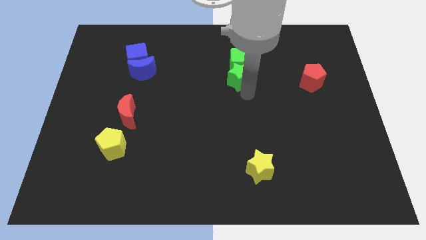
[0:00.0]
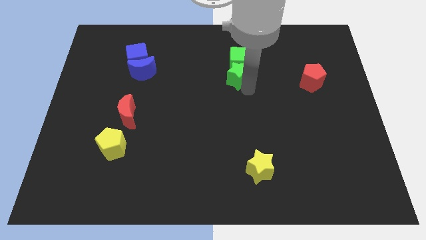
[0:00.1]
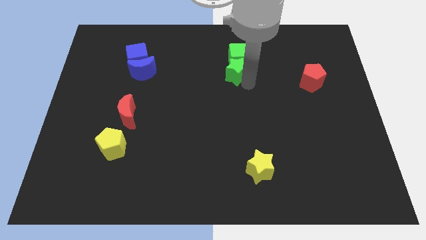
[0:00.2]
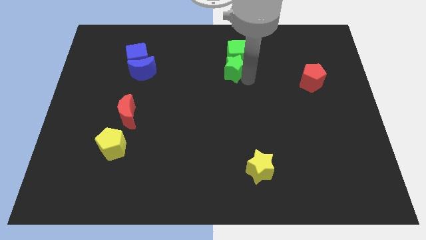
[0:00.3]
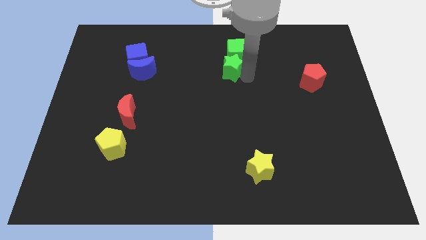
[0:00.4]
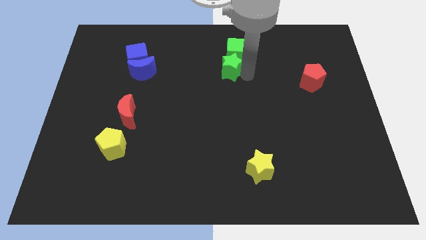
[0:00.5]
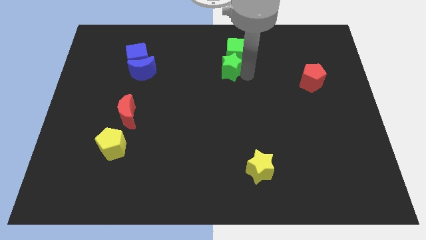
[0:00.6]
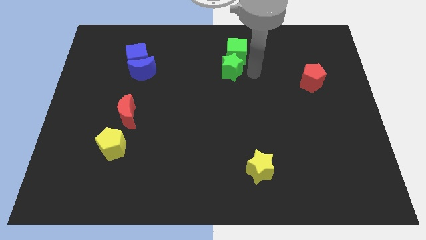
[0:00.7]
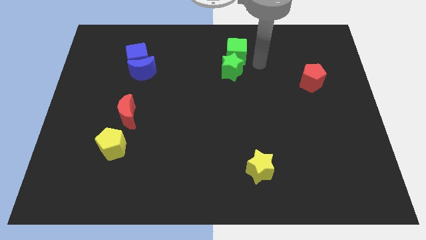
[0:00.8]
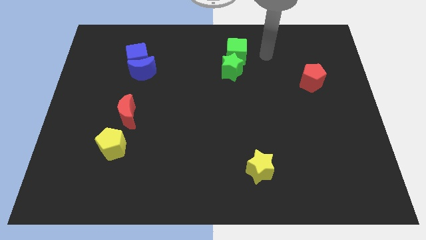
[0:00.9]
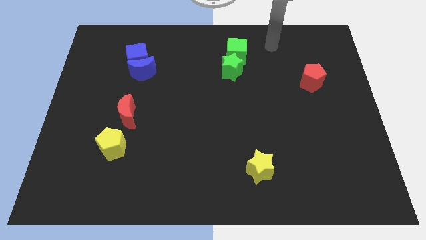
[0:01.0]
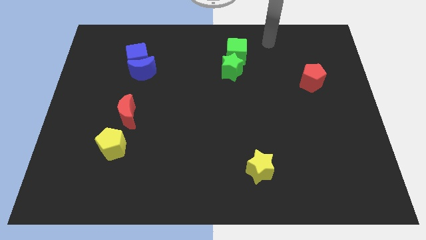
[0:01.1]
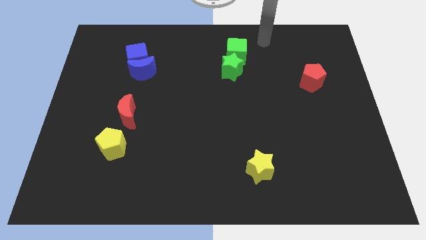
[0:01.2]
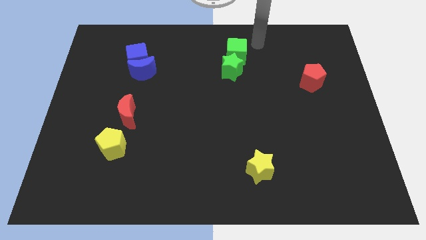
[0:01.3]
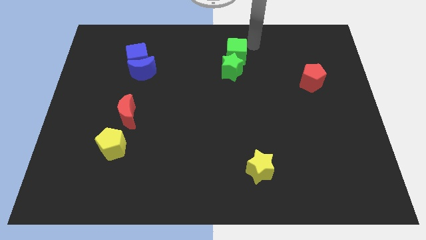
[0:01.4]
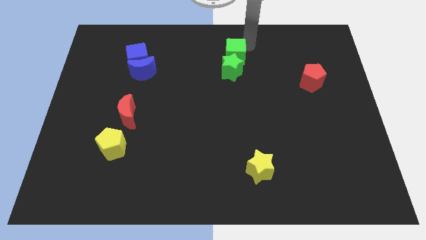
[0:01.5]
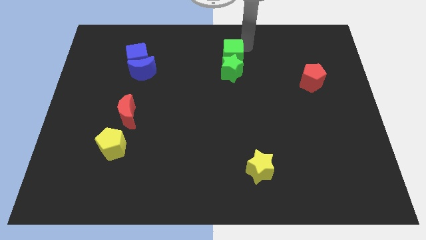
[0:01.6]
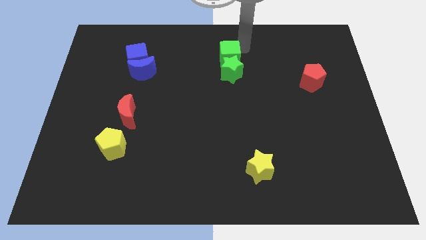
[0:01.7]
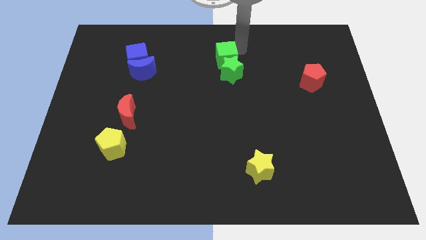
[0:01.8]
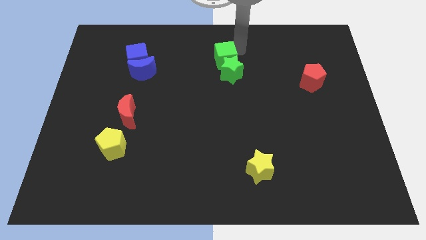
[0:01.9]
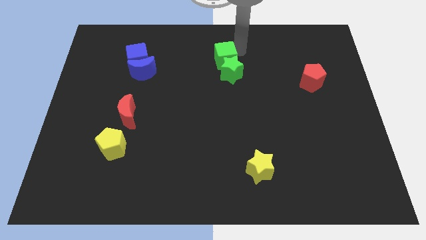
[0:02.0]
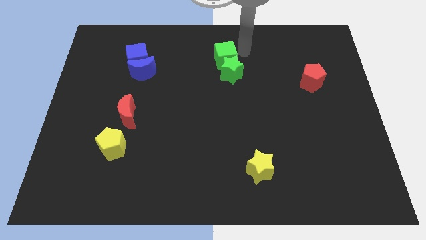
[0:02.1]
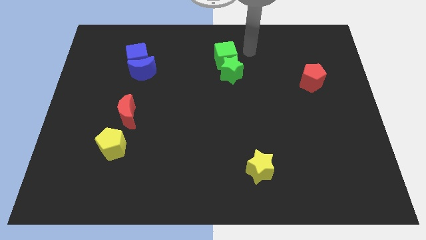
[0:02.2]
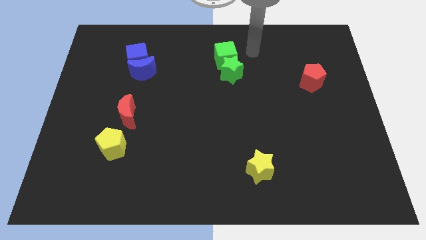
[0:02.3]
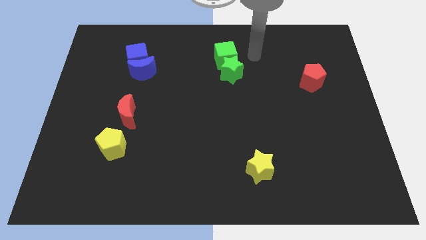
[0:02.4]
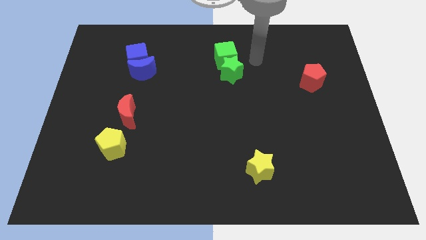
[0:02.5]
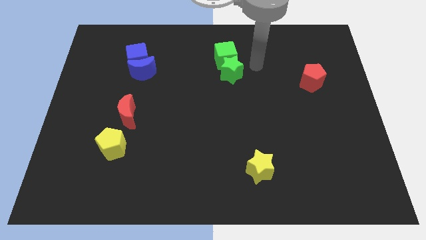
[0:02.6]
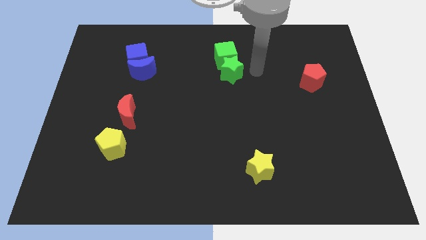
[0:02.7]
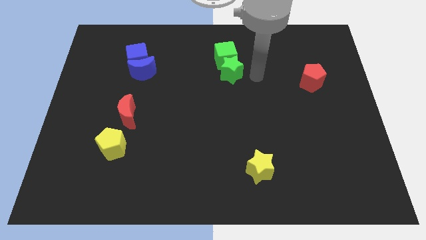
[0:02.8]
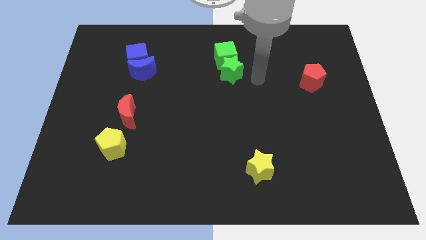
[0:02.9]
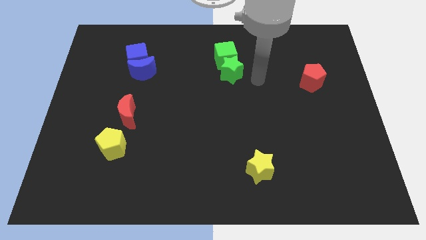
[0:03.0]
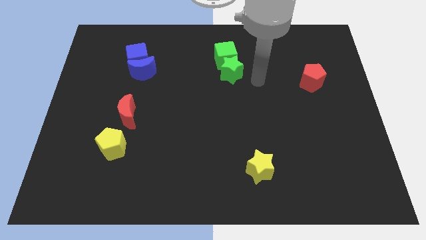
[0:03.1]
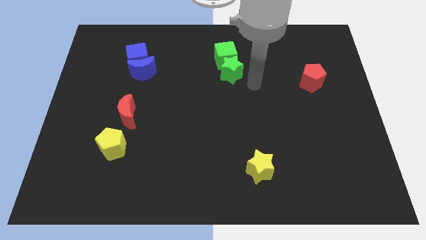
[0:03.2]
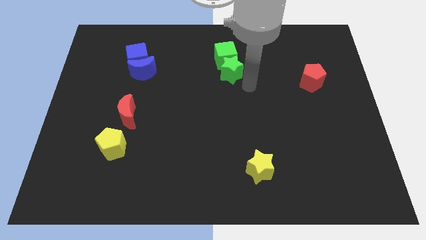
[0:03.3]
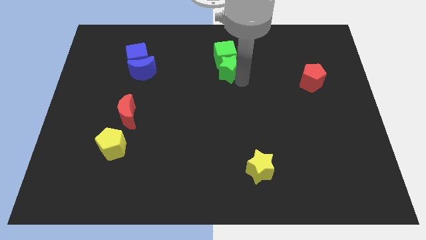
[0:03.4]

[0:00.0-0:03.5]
move both the green blocks towards the top center

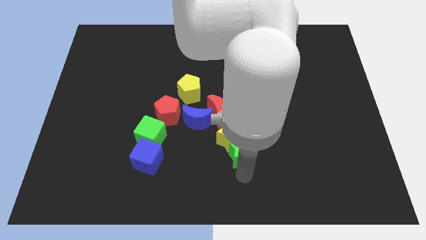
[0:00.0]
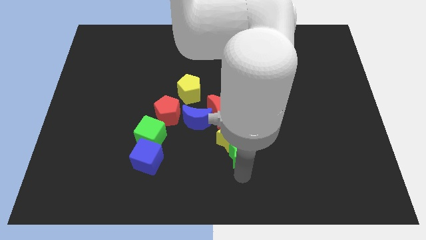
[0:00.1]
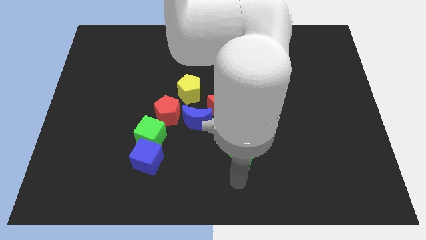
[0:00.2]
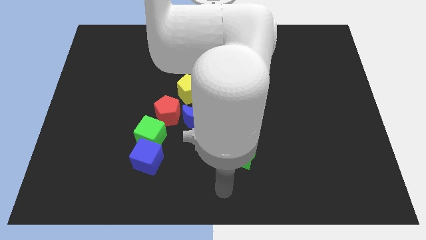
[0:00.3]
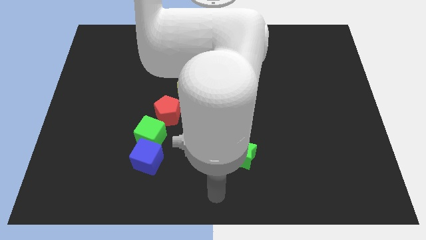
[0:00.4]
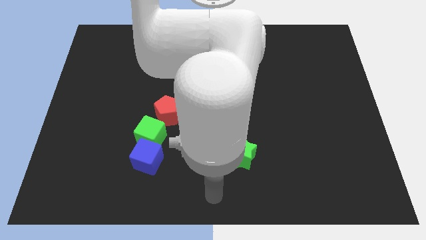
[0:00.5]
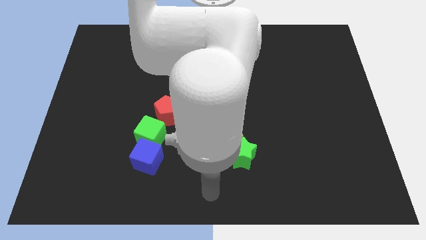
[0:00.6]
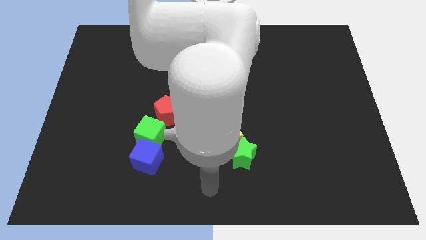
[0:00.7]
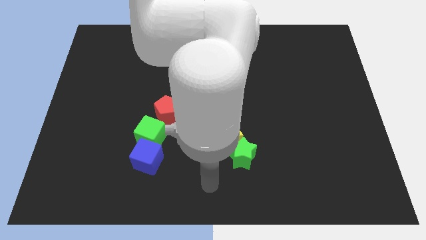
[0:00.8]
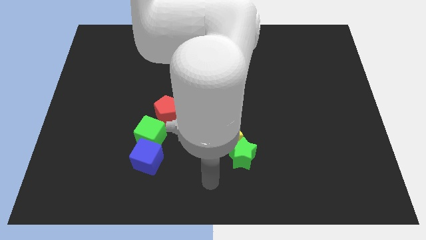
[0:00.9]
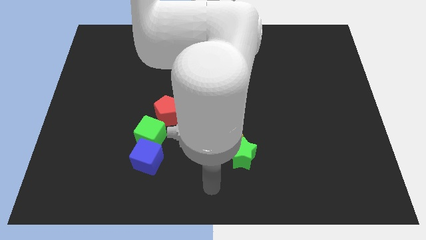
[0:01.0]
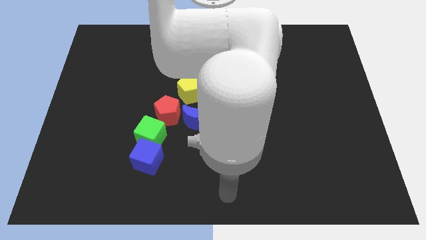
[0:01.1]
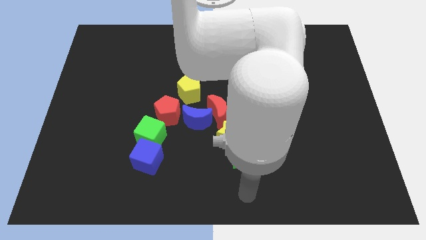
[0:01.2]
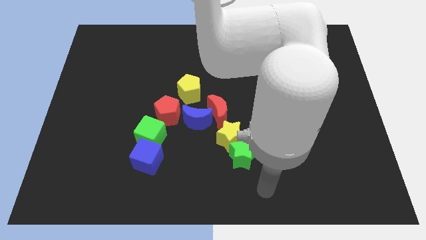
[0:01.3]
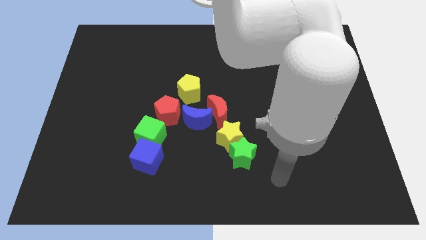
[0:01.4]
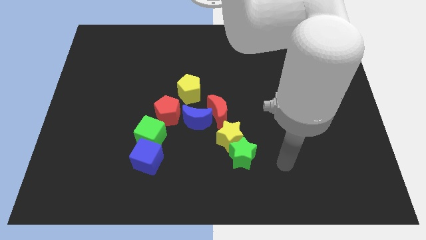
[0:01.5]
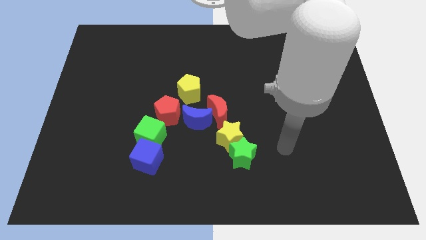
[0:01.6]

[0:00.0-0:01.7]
place your arm at the right of the green star

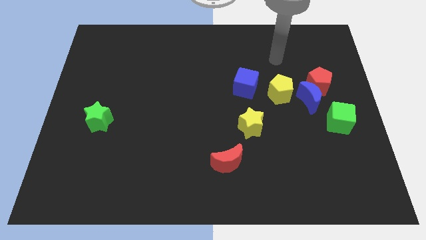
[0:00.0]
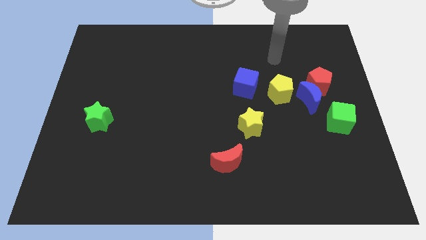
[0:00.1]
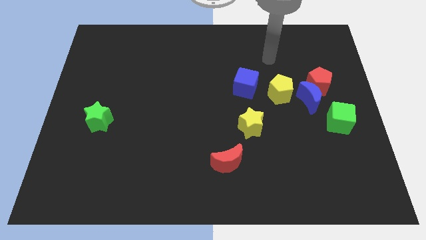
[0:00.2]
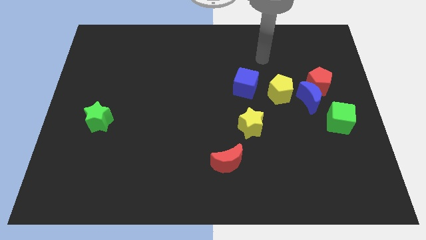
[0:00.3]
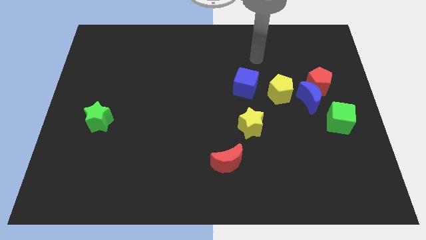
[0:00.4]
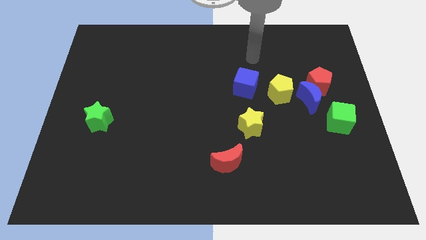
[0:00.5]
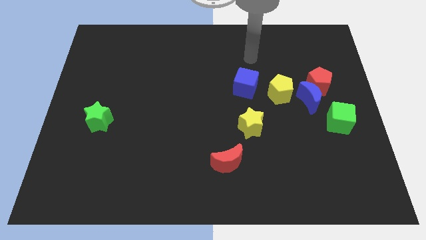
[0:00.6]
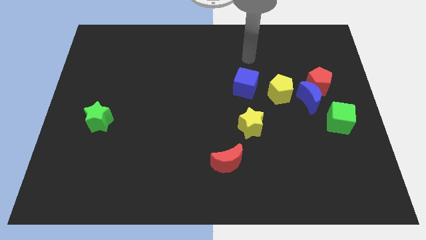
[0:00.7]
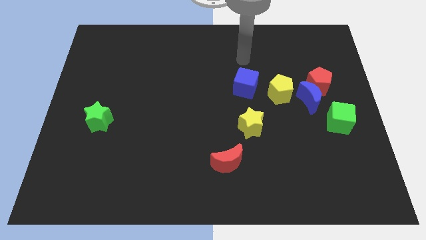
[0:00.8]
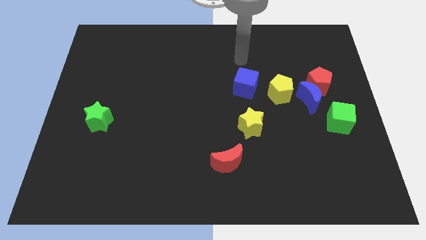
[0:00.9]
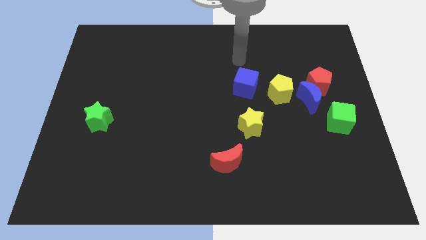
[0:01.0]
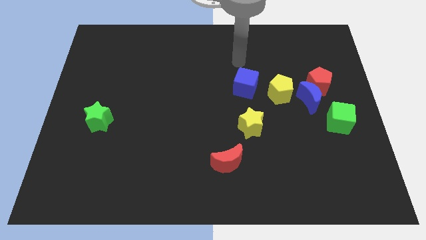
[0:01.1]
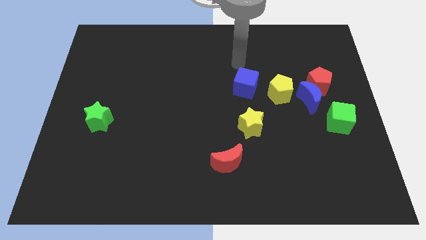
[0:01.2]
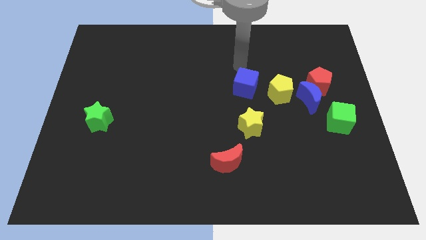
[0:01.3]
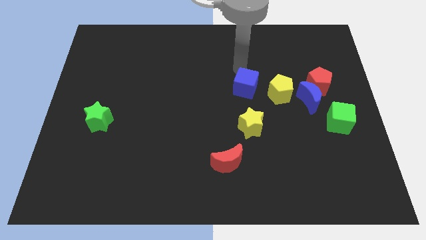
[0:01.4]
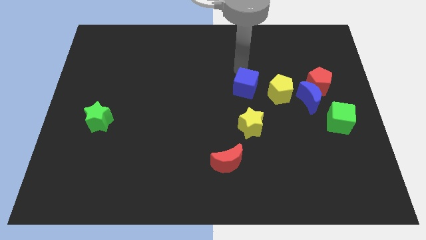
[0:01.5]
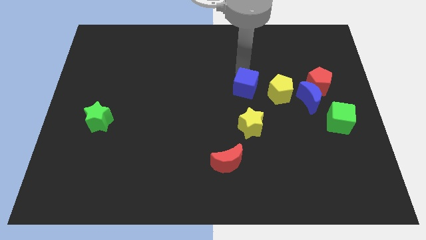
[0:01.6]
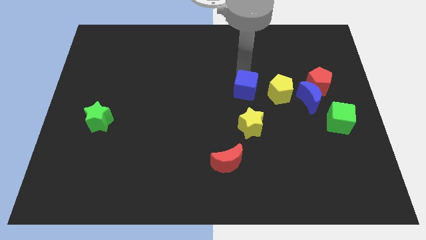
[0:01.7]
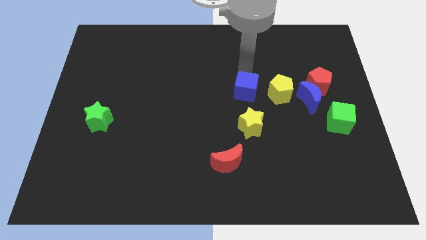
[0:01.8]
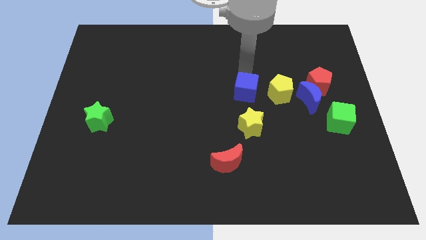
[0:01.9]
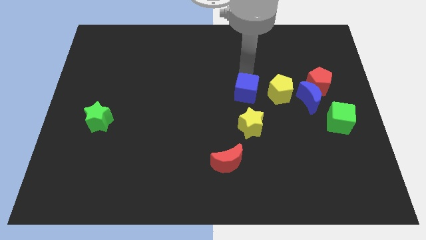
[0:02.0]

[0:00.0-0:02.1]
tap on top side of blue cube

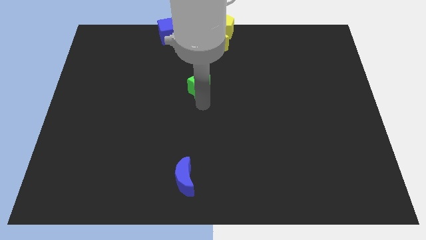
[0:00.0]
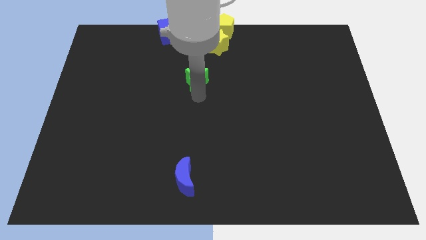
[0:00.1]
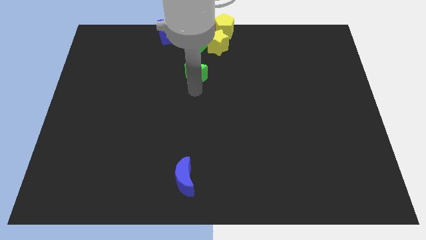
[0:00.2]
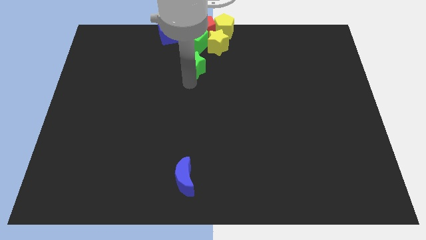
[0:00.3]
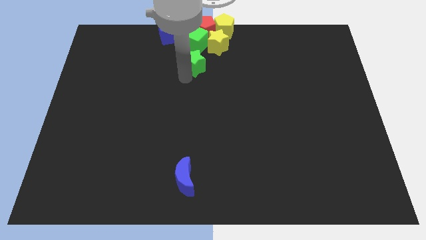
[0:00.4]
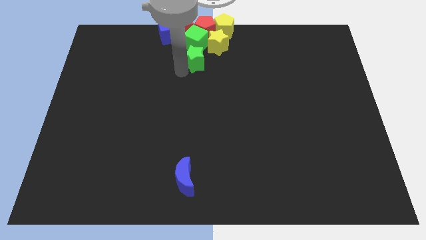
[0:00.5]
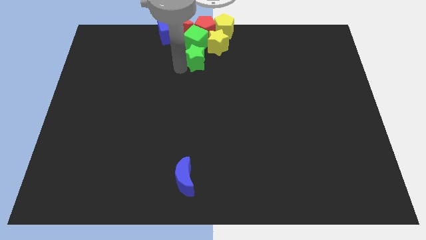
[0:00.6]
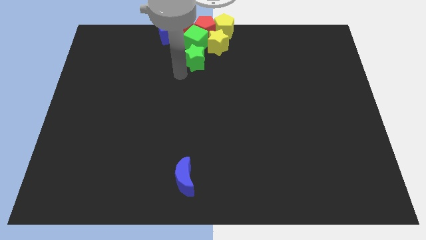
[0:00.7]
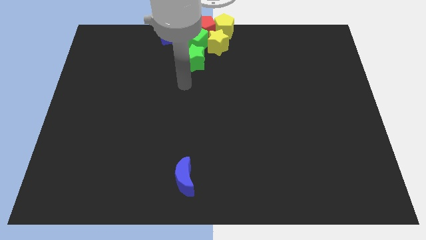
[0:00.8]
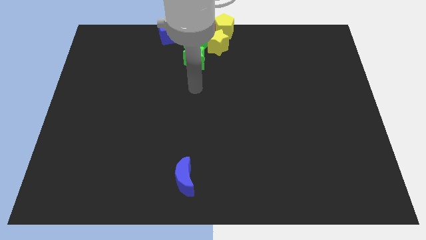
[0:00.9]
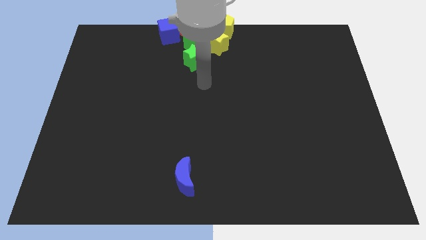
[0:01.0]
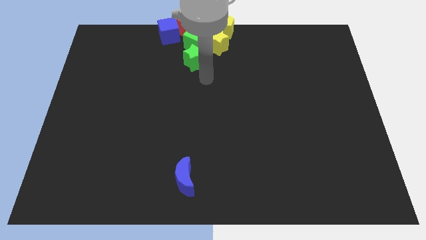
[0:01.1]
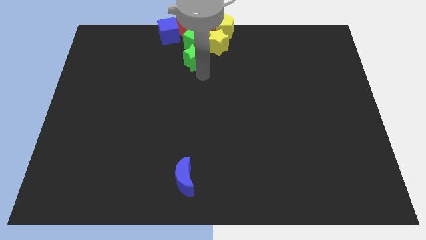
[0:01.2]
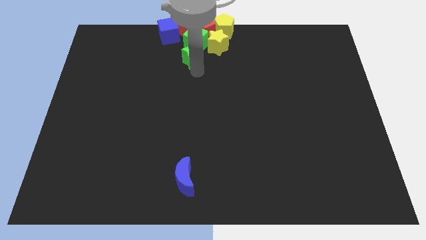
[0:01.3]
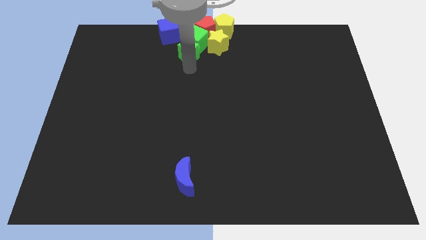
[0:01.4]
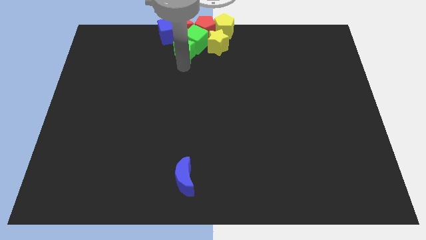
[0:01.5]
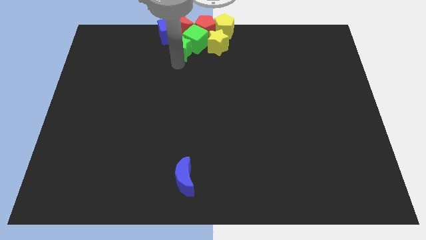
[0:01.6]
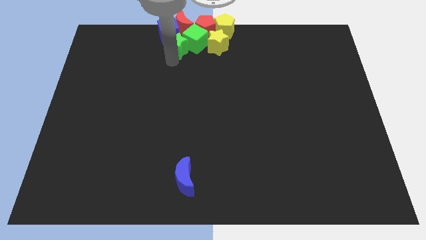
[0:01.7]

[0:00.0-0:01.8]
push the green star into the green cube
